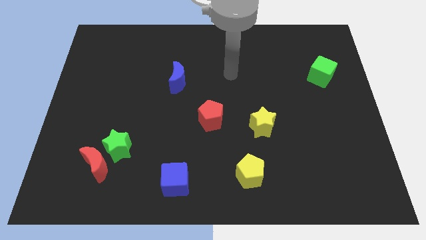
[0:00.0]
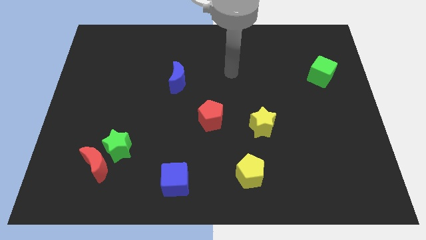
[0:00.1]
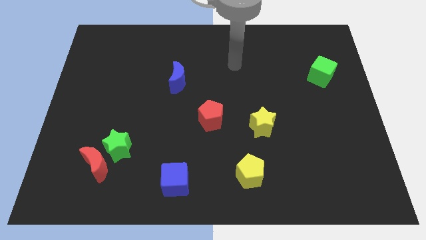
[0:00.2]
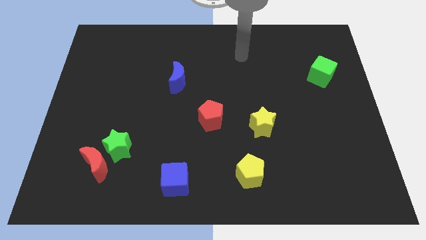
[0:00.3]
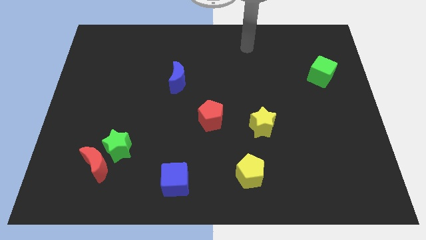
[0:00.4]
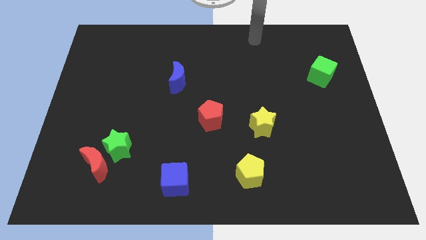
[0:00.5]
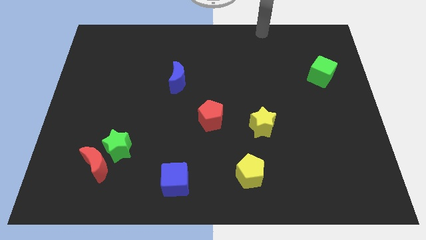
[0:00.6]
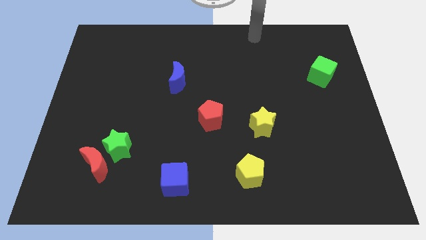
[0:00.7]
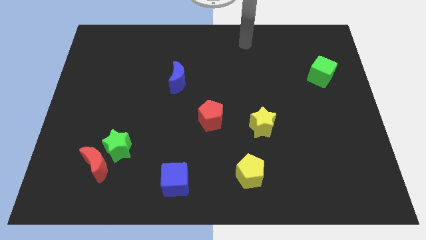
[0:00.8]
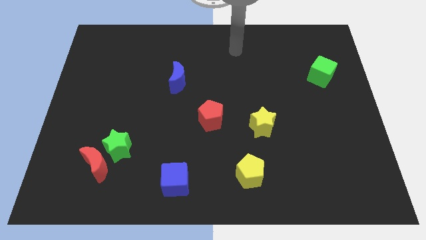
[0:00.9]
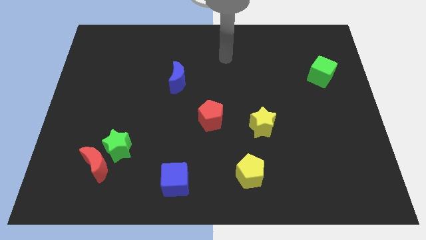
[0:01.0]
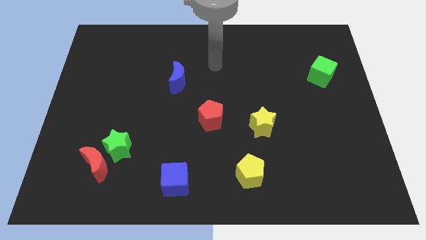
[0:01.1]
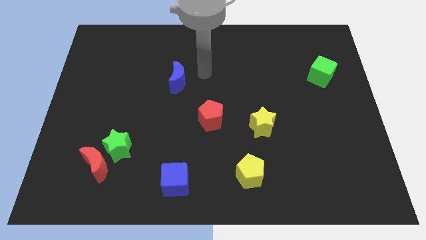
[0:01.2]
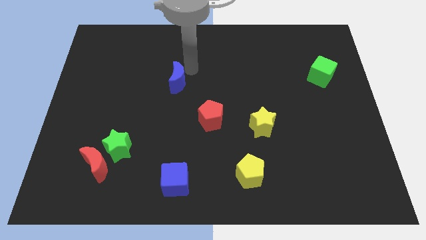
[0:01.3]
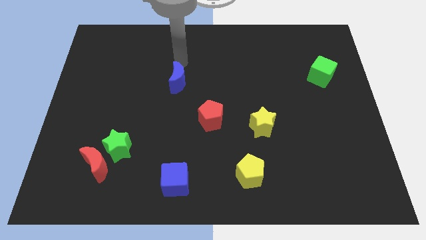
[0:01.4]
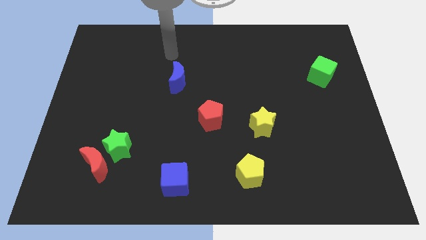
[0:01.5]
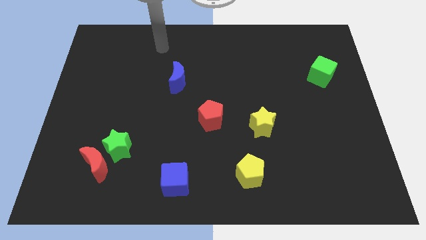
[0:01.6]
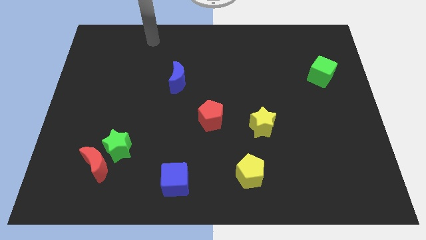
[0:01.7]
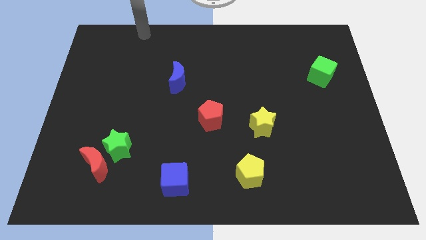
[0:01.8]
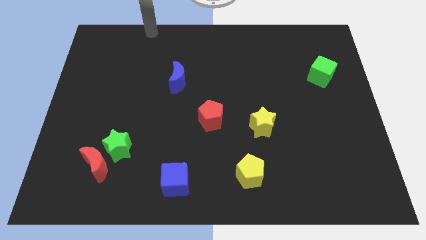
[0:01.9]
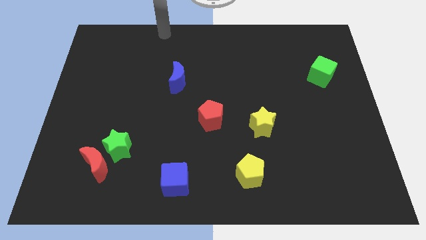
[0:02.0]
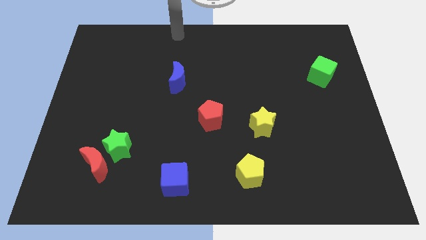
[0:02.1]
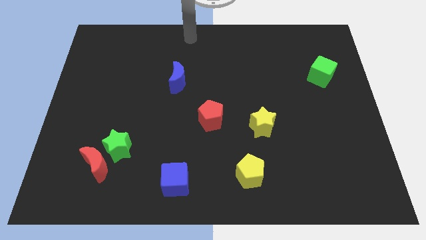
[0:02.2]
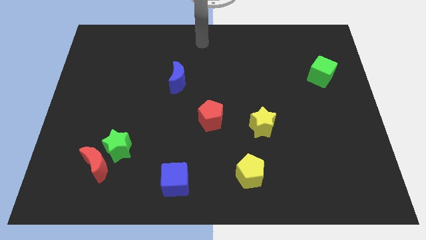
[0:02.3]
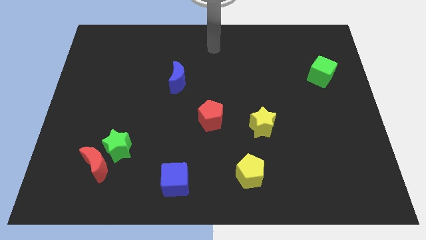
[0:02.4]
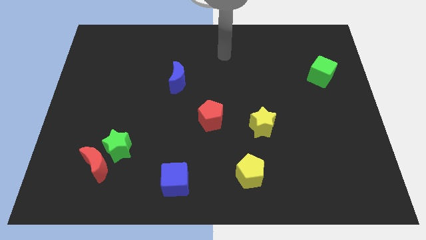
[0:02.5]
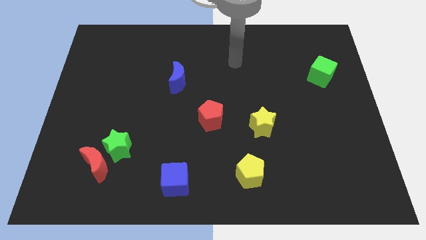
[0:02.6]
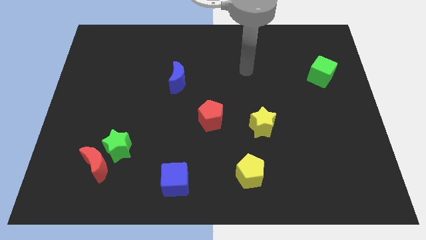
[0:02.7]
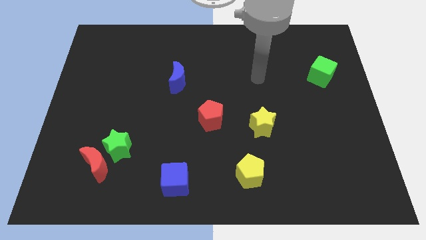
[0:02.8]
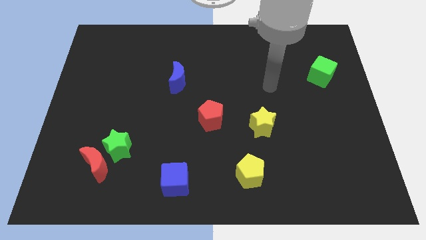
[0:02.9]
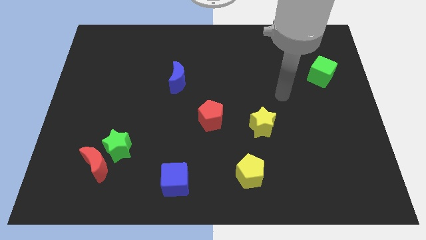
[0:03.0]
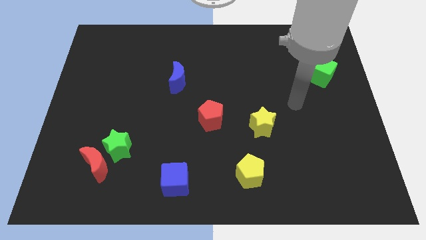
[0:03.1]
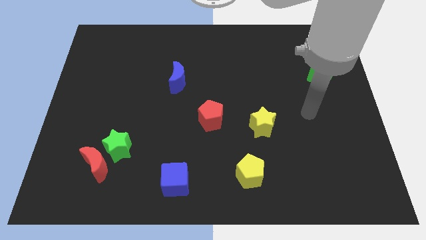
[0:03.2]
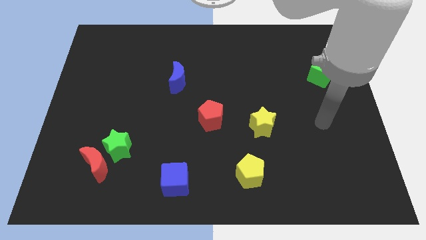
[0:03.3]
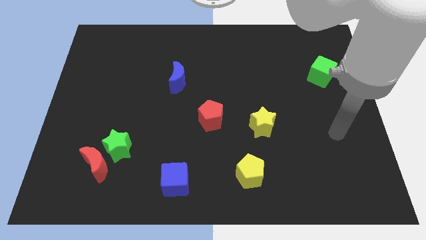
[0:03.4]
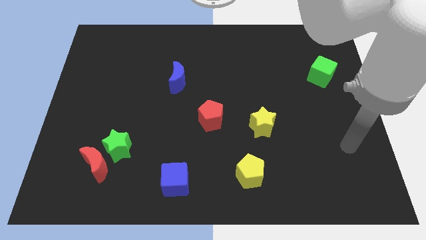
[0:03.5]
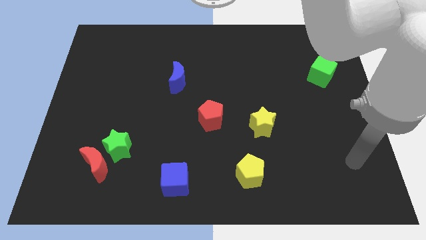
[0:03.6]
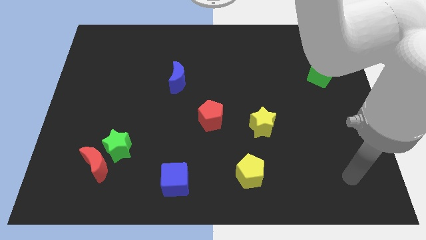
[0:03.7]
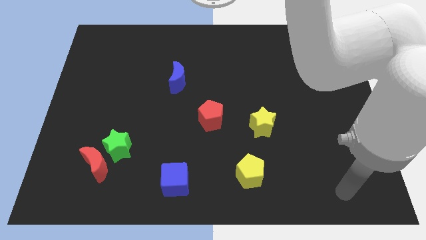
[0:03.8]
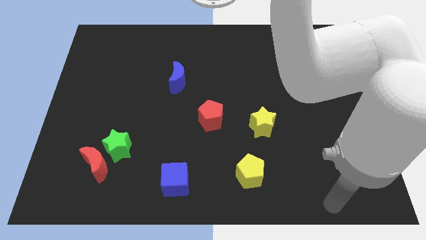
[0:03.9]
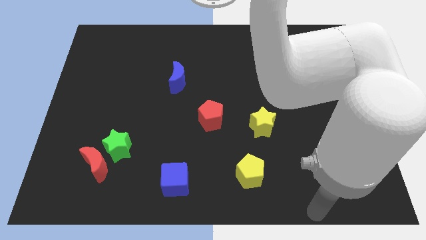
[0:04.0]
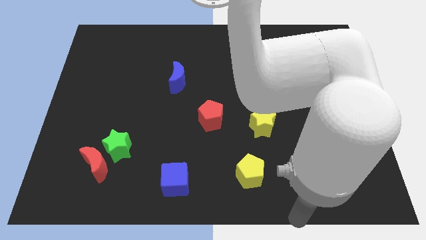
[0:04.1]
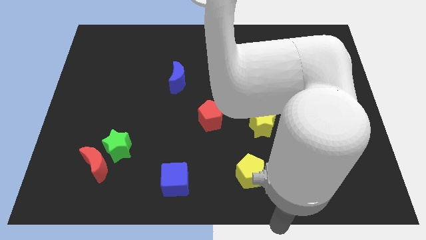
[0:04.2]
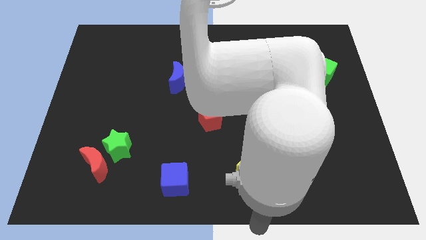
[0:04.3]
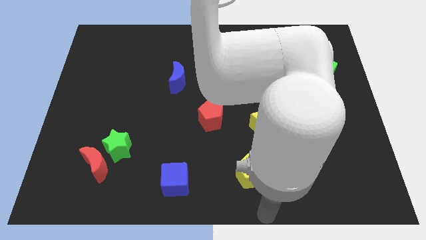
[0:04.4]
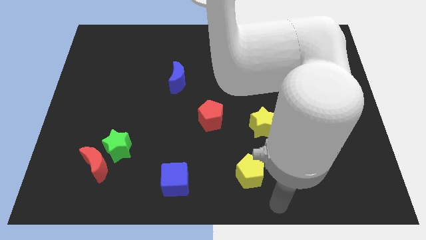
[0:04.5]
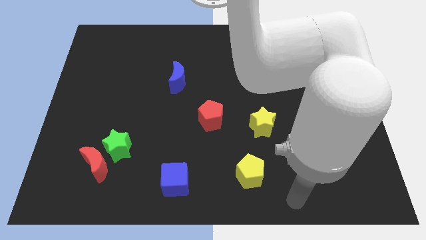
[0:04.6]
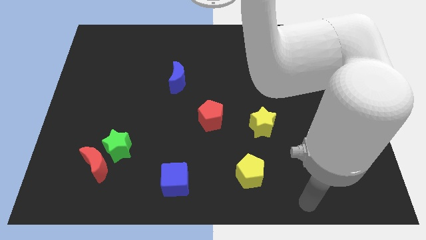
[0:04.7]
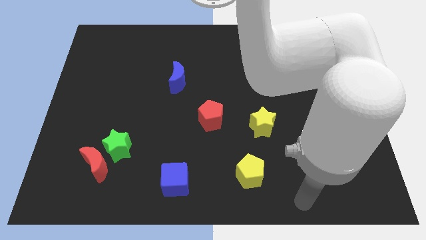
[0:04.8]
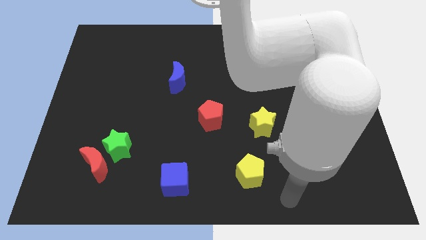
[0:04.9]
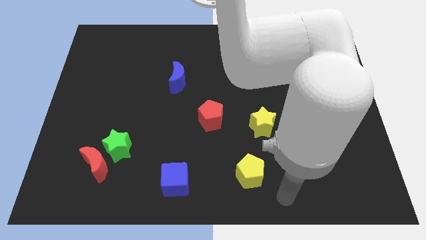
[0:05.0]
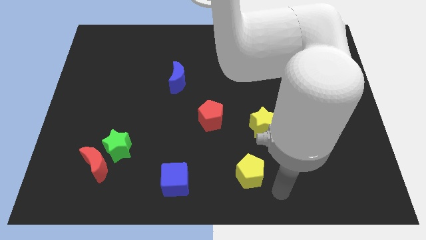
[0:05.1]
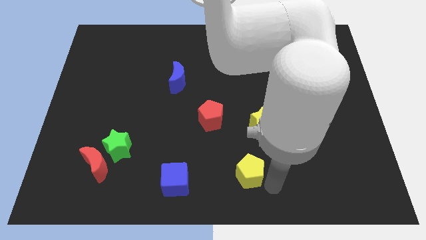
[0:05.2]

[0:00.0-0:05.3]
move your arm right to the yellow pentagon

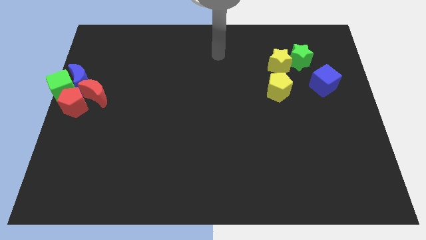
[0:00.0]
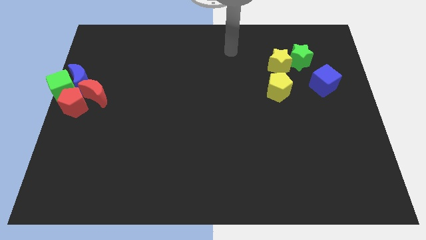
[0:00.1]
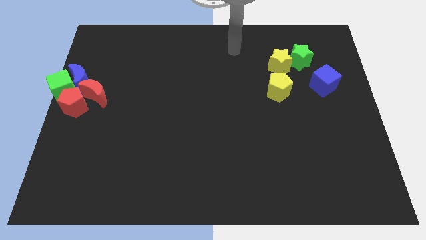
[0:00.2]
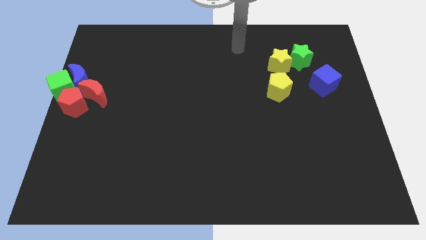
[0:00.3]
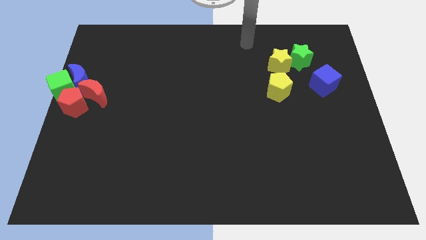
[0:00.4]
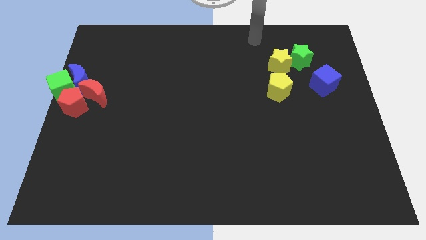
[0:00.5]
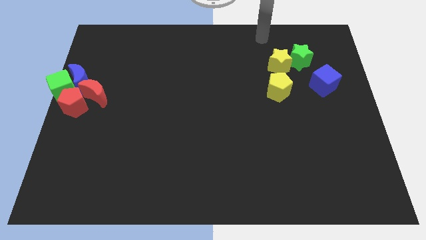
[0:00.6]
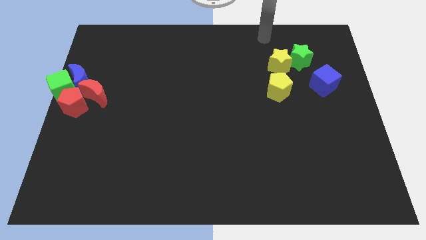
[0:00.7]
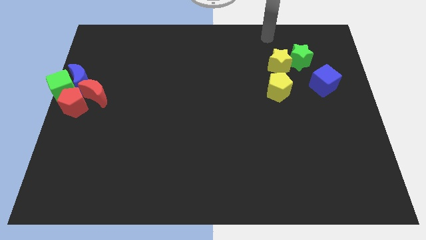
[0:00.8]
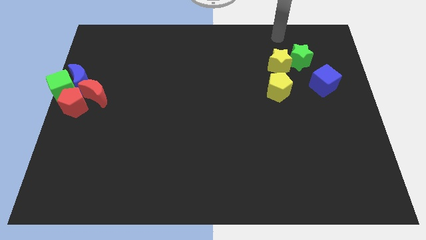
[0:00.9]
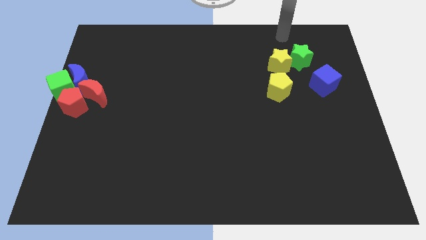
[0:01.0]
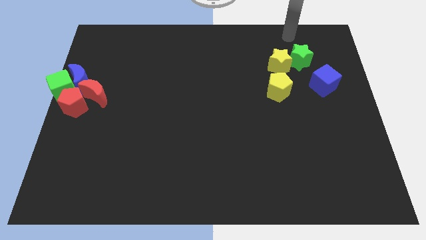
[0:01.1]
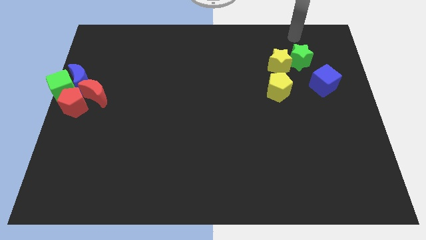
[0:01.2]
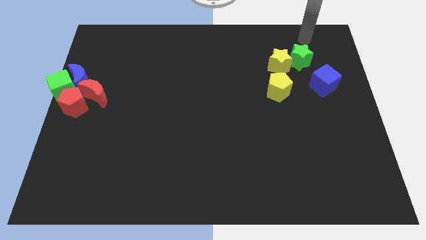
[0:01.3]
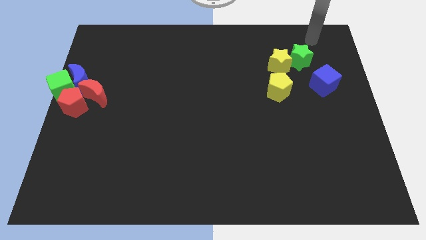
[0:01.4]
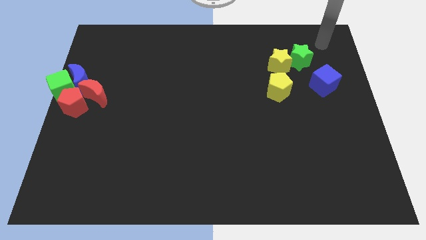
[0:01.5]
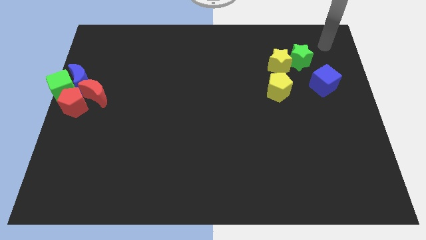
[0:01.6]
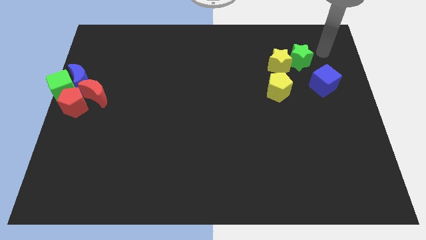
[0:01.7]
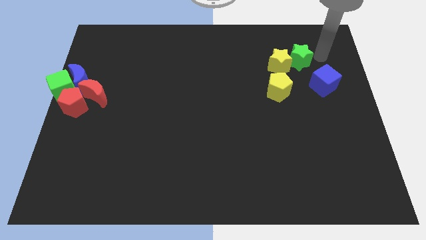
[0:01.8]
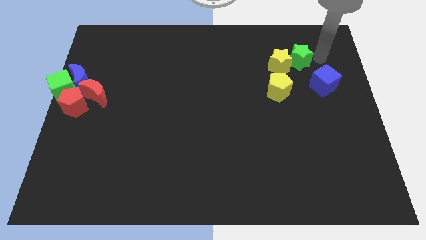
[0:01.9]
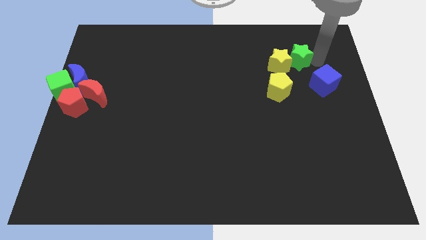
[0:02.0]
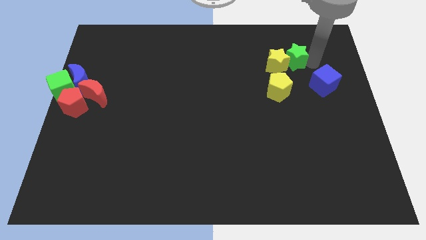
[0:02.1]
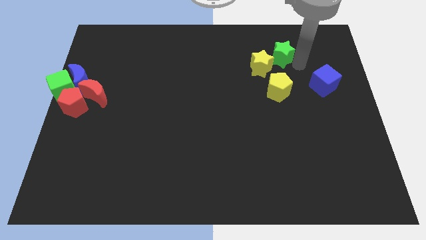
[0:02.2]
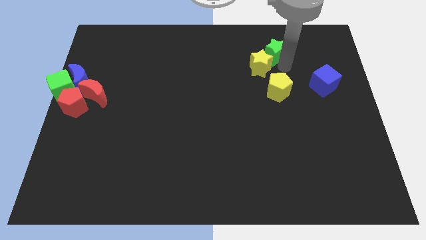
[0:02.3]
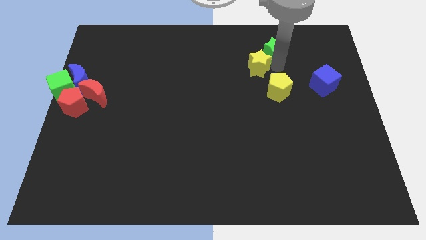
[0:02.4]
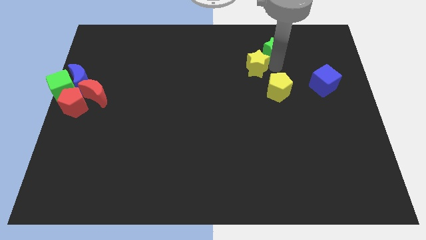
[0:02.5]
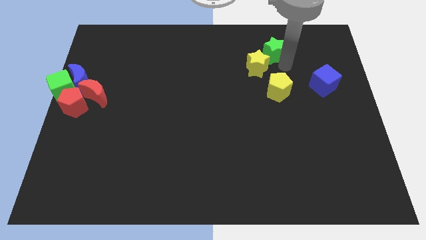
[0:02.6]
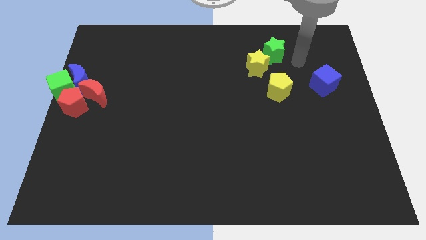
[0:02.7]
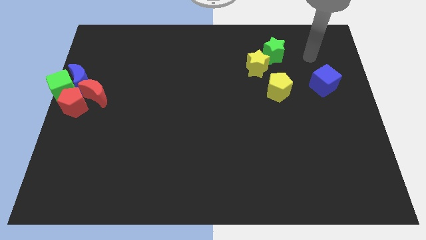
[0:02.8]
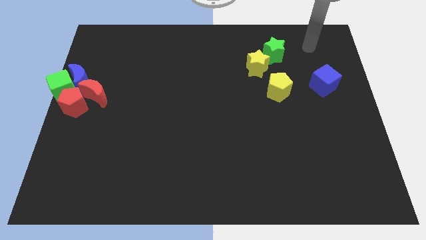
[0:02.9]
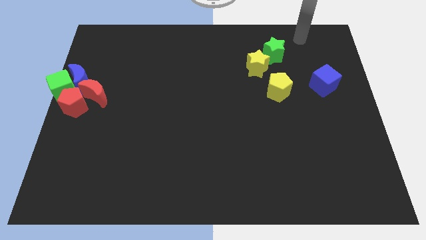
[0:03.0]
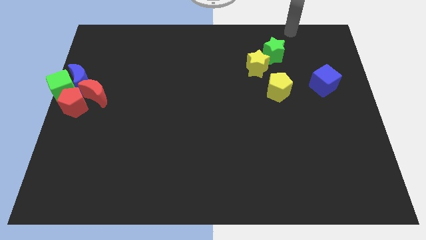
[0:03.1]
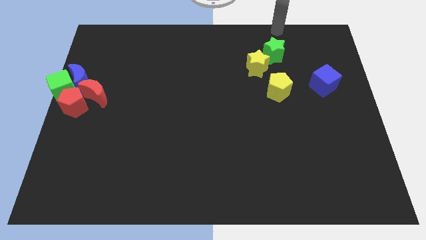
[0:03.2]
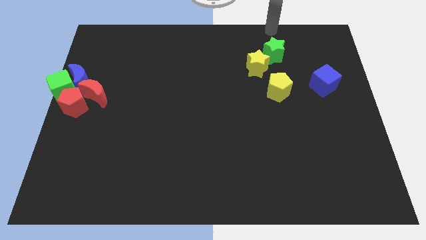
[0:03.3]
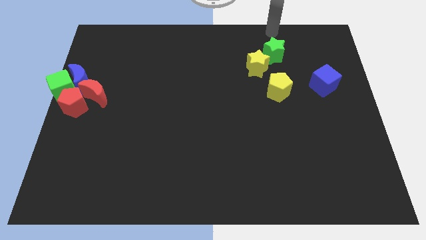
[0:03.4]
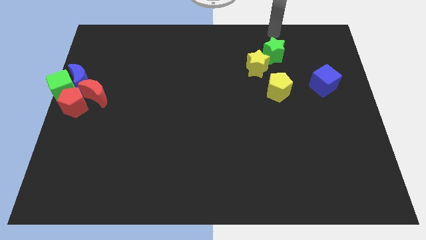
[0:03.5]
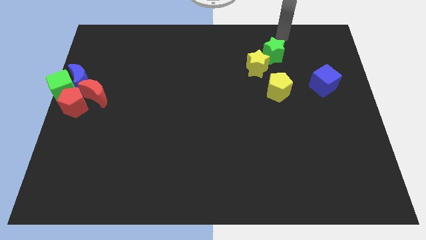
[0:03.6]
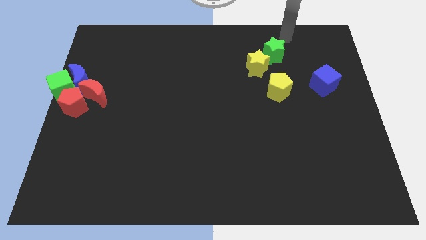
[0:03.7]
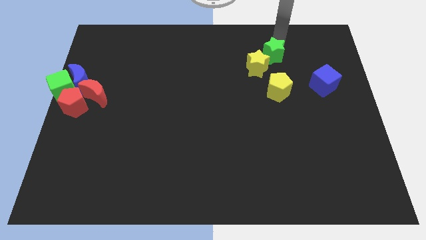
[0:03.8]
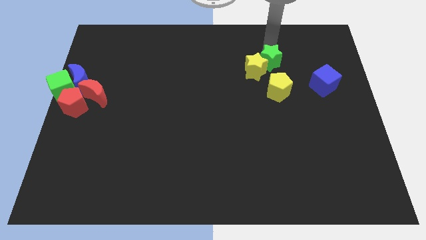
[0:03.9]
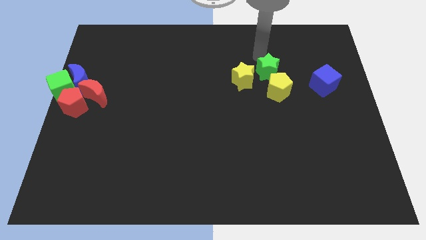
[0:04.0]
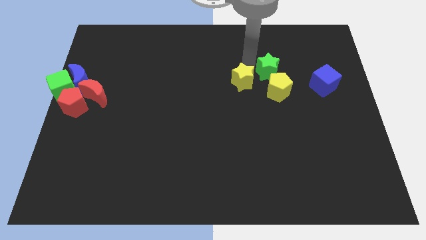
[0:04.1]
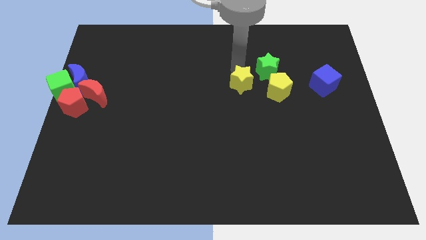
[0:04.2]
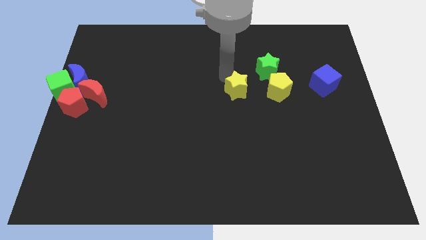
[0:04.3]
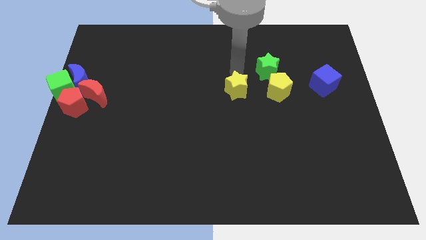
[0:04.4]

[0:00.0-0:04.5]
move the yellow star left beside the yellow pentagon
